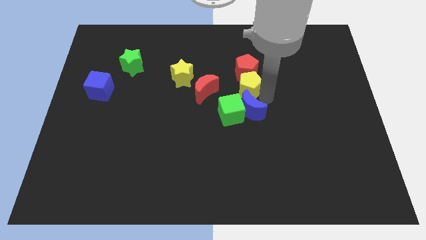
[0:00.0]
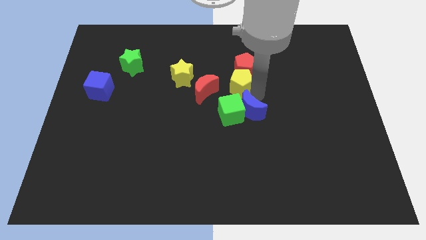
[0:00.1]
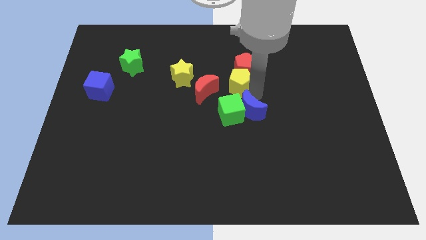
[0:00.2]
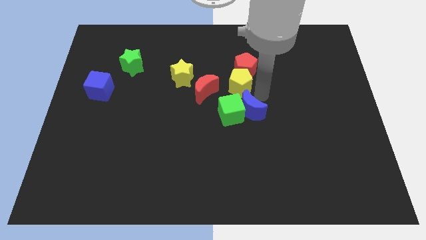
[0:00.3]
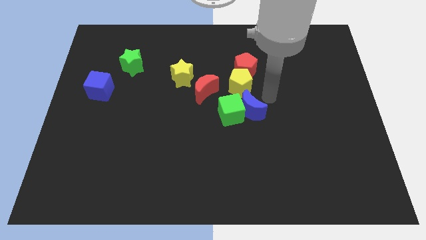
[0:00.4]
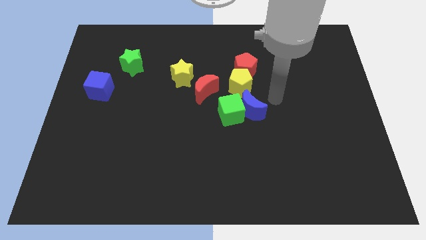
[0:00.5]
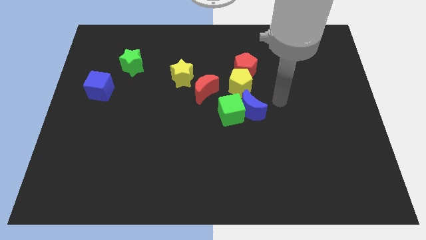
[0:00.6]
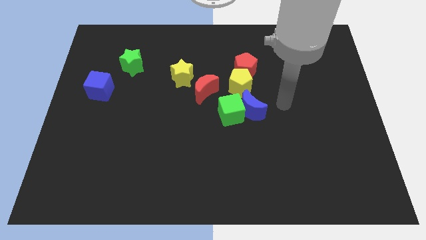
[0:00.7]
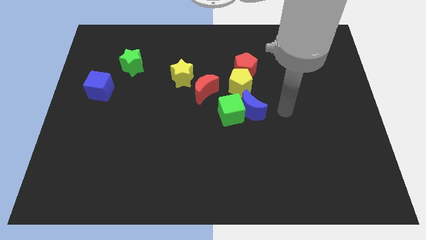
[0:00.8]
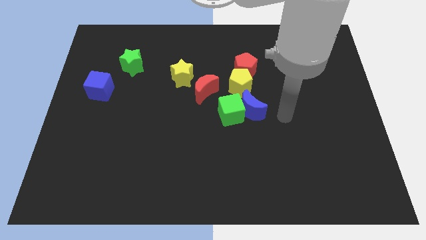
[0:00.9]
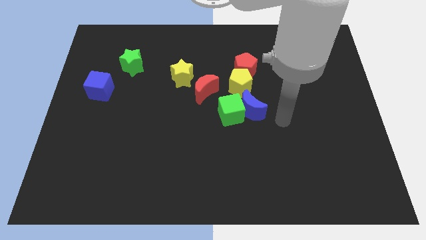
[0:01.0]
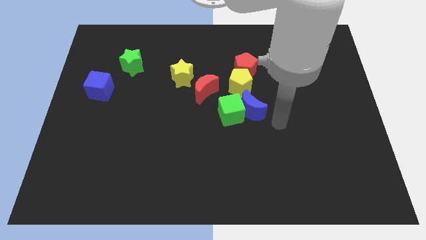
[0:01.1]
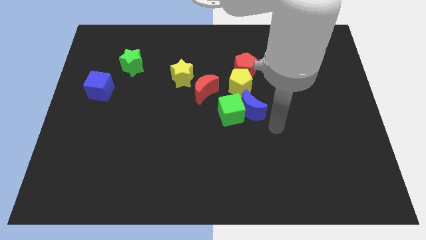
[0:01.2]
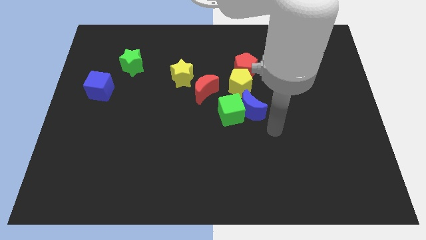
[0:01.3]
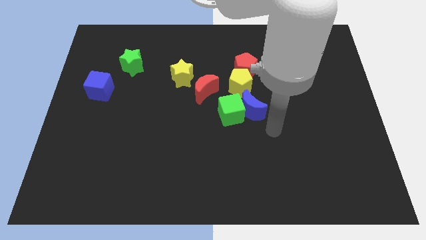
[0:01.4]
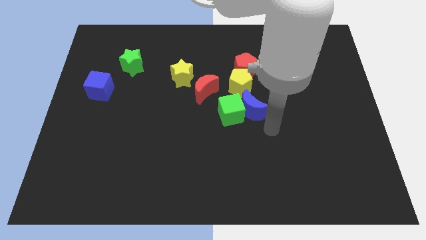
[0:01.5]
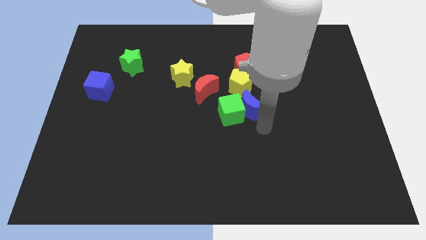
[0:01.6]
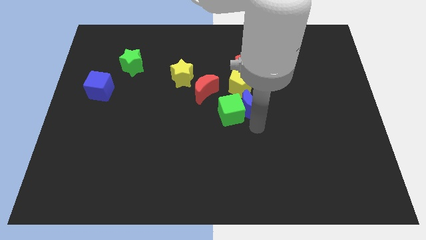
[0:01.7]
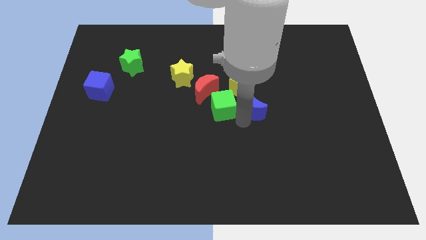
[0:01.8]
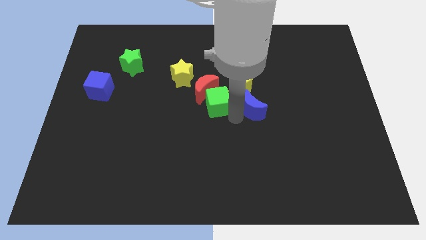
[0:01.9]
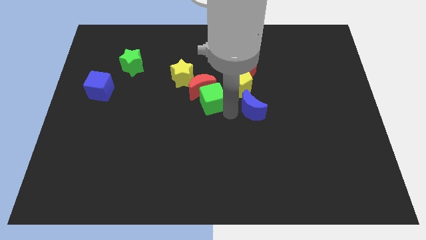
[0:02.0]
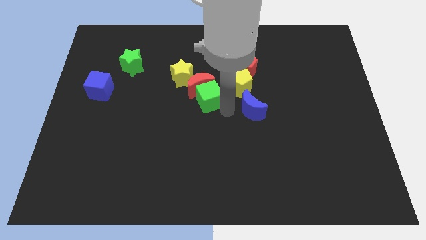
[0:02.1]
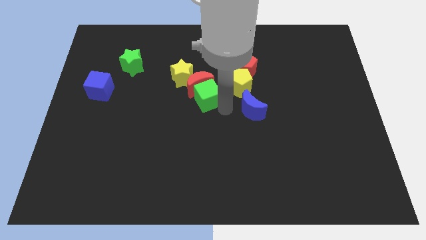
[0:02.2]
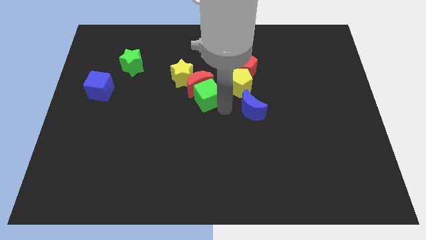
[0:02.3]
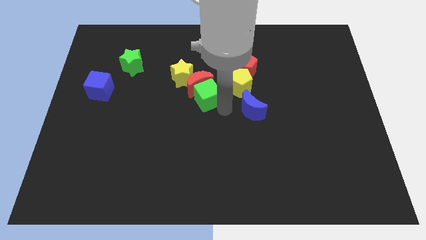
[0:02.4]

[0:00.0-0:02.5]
move green cube close to red moon

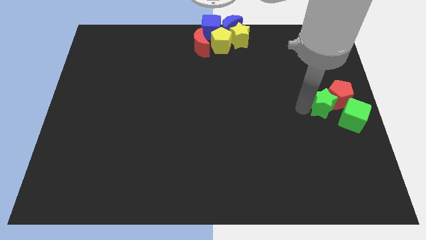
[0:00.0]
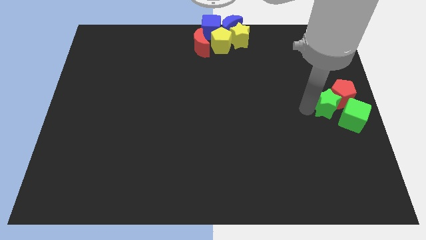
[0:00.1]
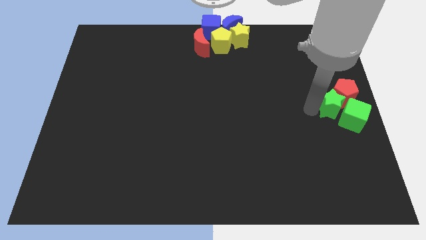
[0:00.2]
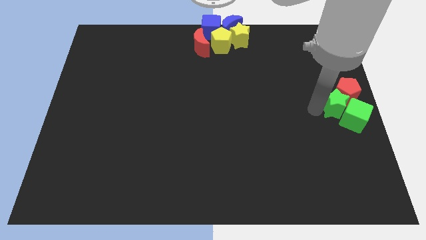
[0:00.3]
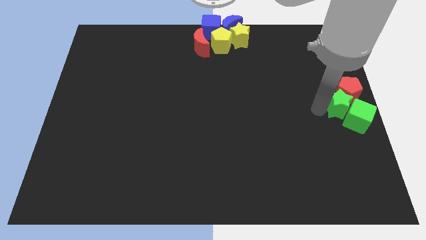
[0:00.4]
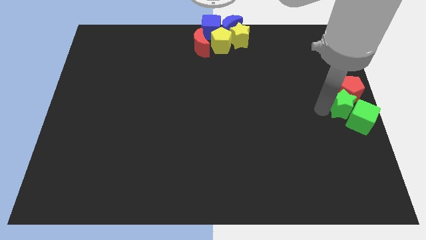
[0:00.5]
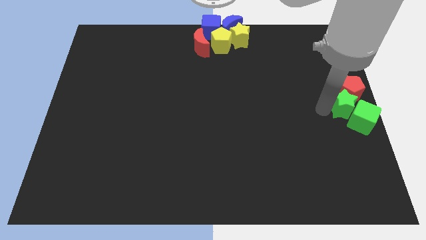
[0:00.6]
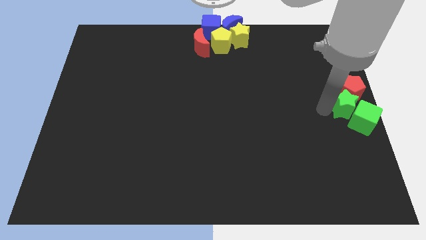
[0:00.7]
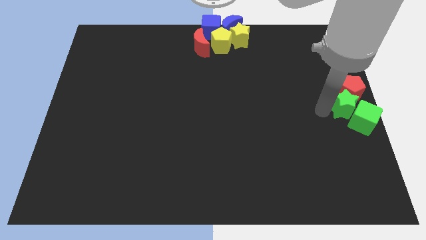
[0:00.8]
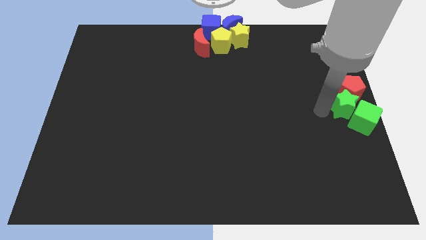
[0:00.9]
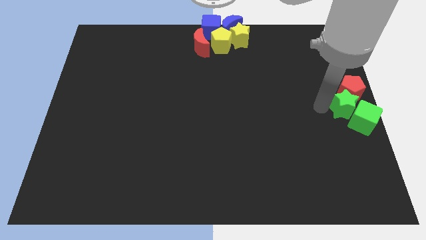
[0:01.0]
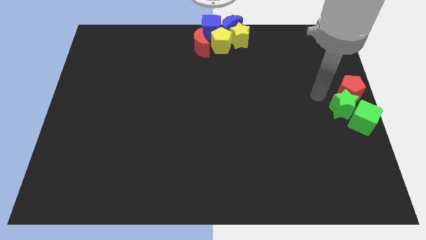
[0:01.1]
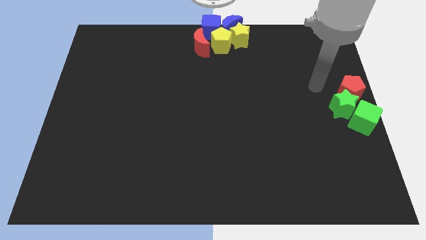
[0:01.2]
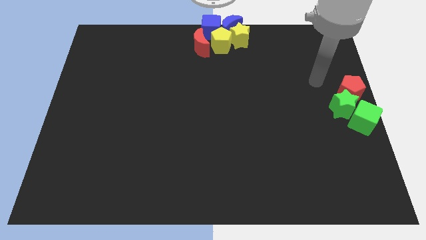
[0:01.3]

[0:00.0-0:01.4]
push the green star into the red pentagon and green cube

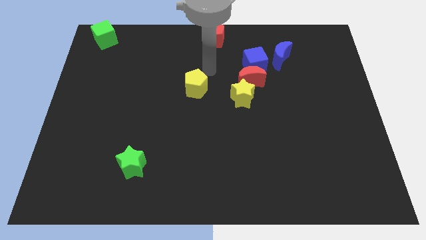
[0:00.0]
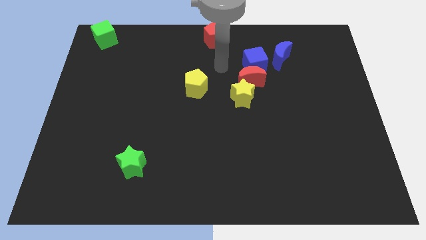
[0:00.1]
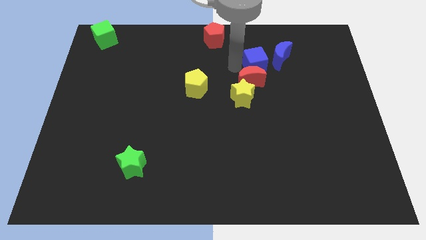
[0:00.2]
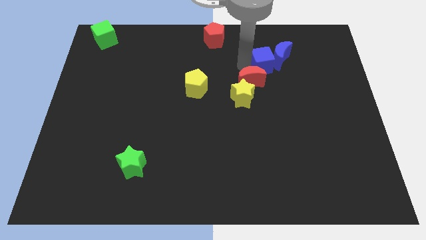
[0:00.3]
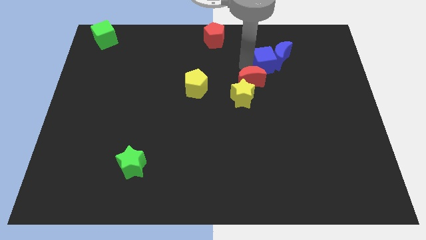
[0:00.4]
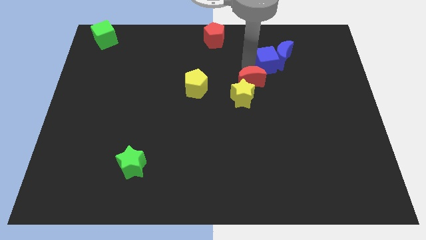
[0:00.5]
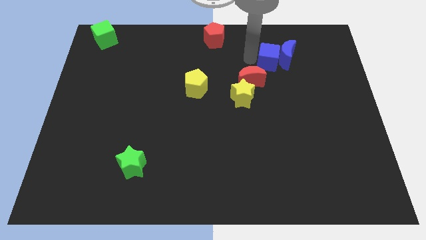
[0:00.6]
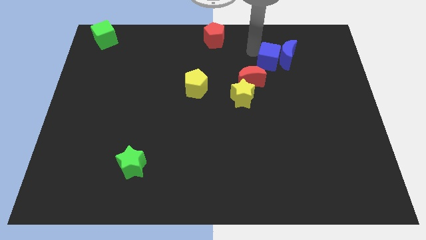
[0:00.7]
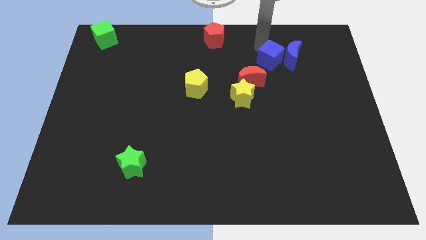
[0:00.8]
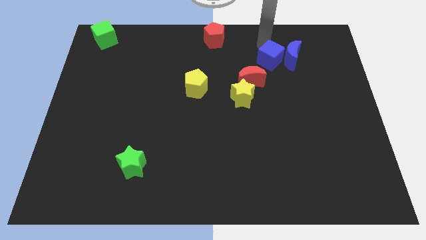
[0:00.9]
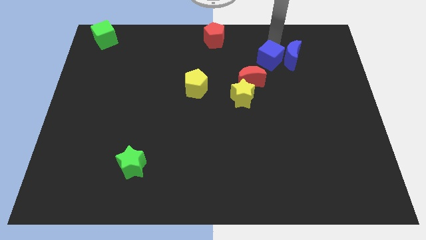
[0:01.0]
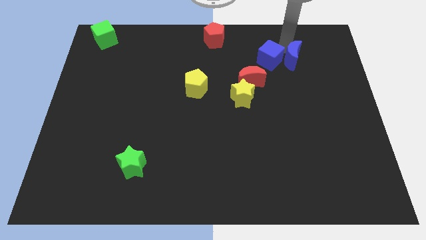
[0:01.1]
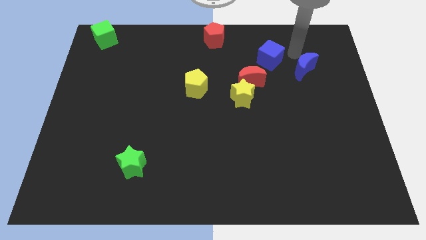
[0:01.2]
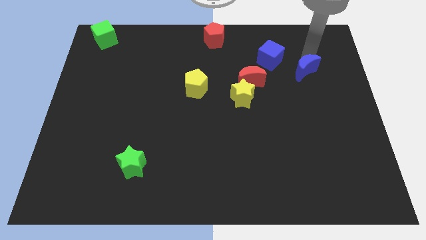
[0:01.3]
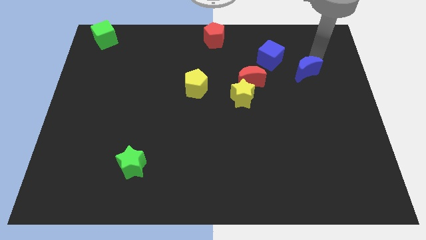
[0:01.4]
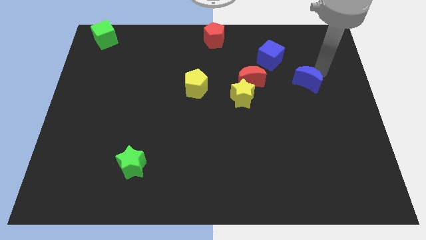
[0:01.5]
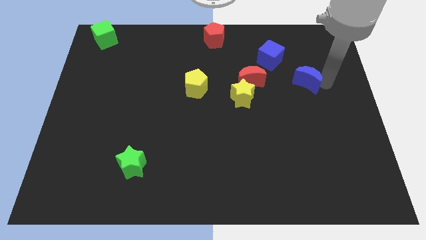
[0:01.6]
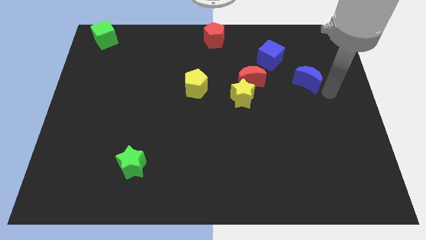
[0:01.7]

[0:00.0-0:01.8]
move the blue crescent away from the blue cube

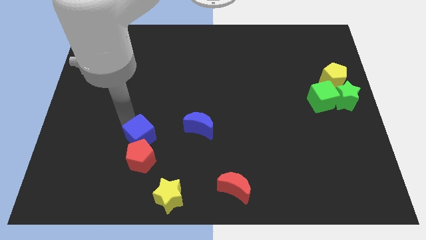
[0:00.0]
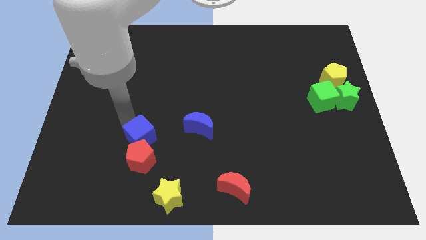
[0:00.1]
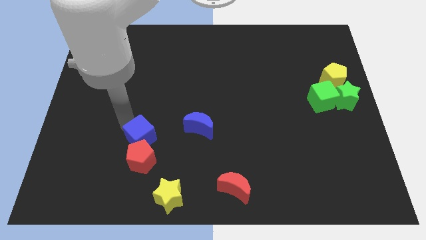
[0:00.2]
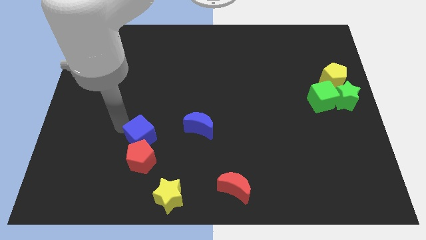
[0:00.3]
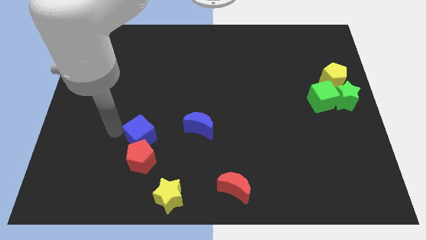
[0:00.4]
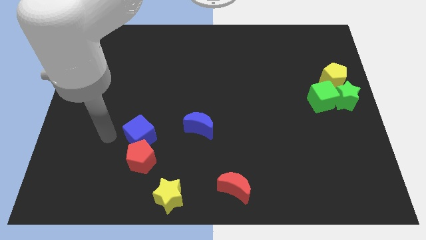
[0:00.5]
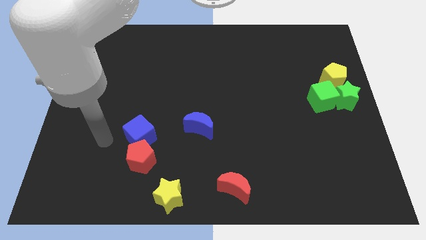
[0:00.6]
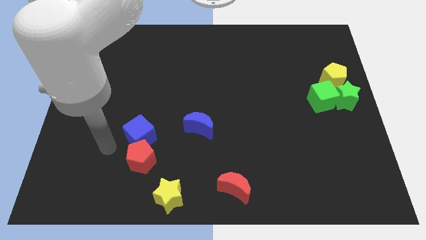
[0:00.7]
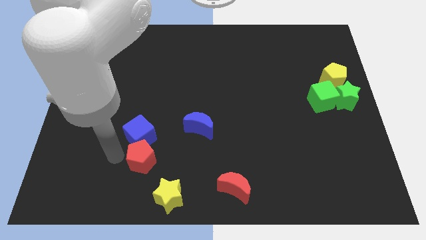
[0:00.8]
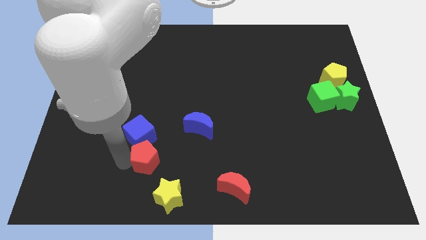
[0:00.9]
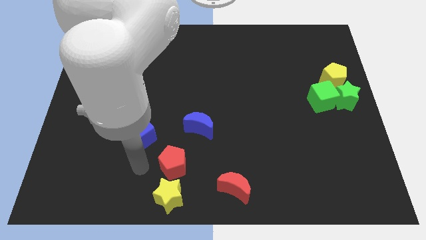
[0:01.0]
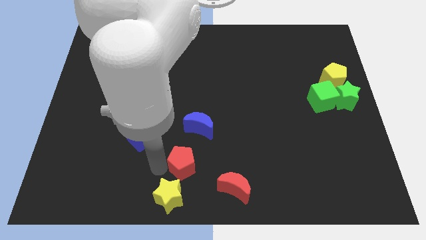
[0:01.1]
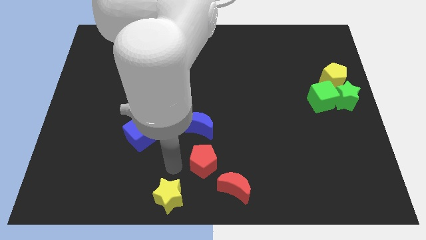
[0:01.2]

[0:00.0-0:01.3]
place the red pentagon above the yellow star

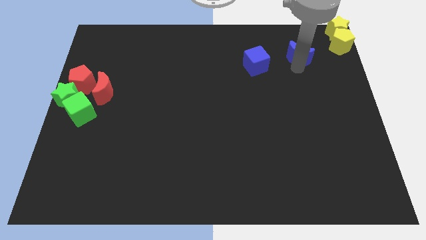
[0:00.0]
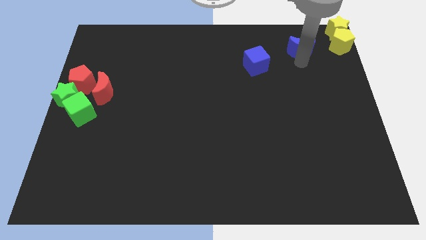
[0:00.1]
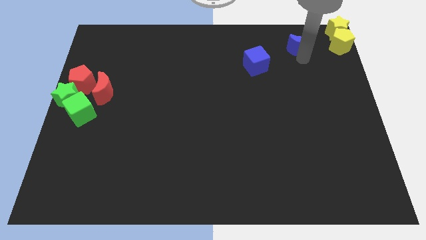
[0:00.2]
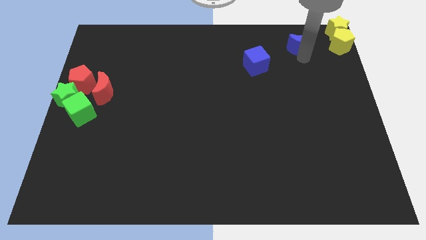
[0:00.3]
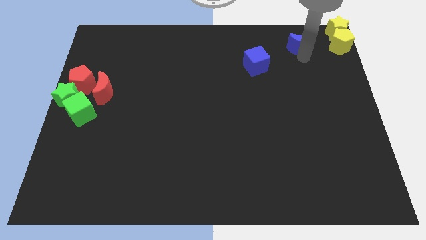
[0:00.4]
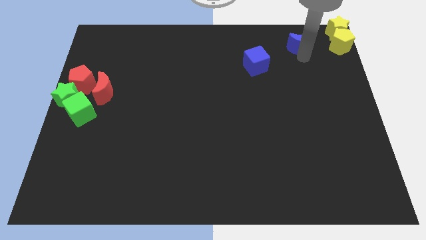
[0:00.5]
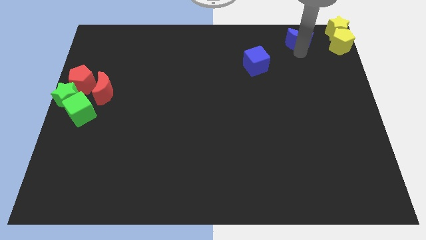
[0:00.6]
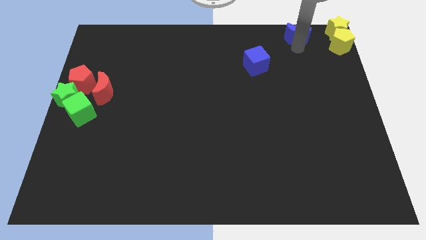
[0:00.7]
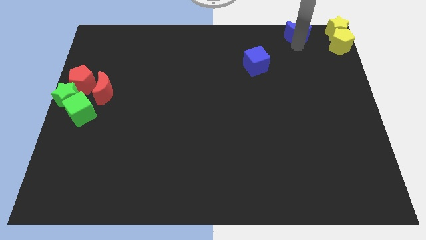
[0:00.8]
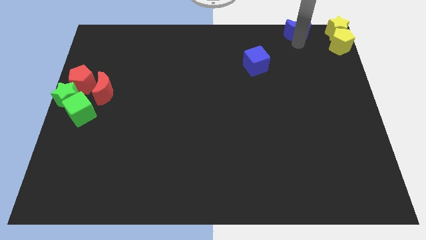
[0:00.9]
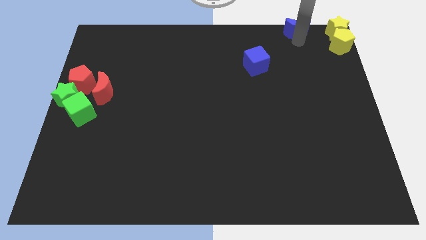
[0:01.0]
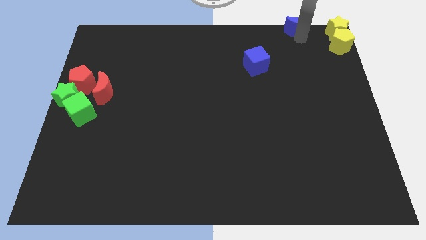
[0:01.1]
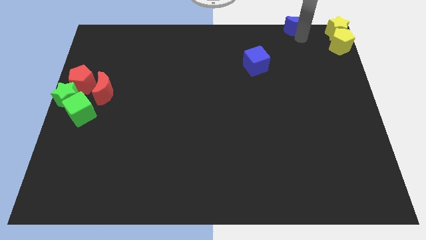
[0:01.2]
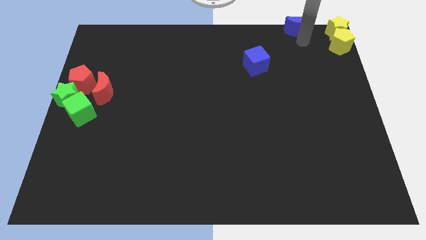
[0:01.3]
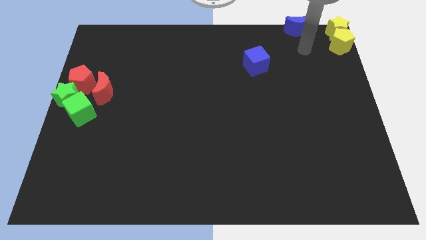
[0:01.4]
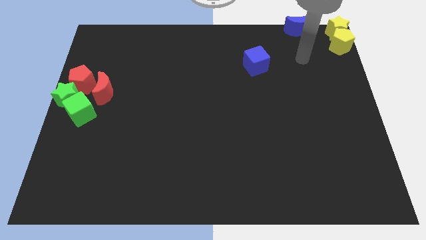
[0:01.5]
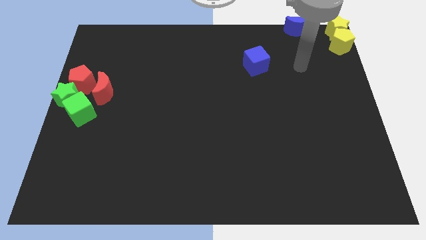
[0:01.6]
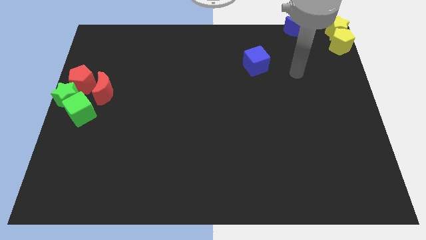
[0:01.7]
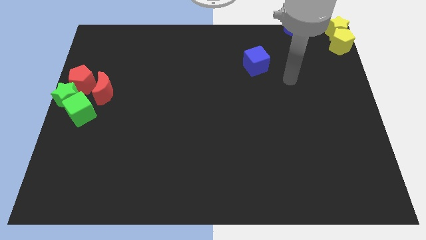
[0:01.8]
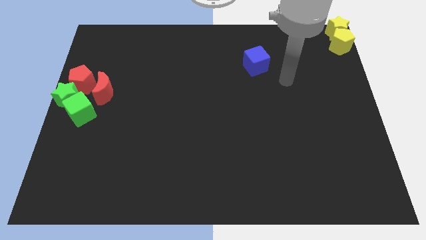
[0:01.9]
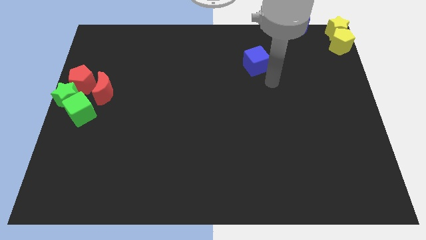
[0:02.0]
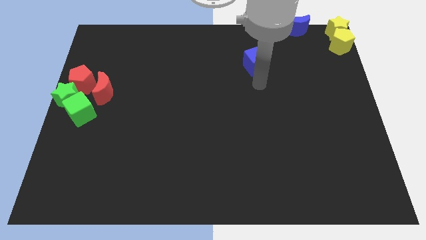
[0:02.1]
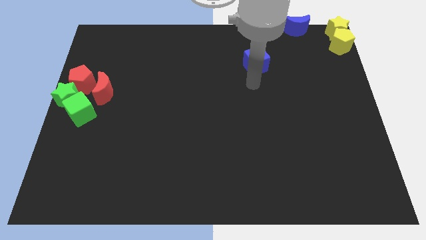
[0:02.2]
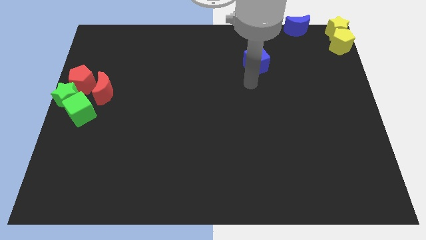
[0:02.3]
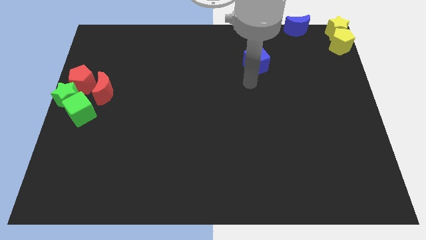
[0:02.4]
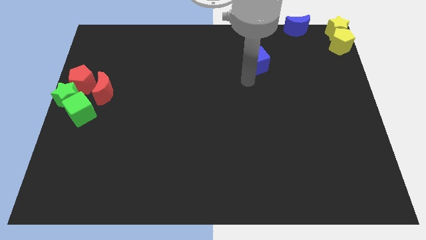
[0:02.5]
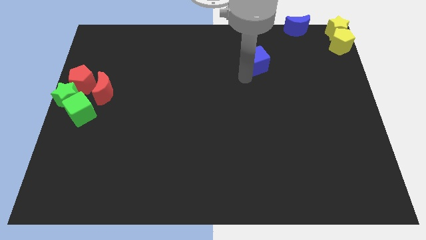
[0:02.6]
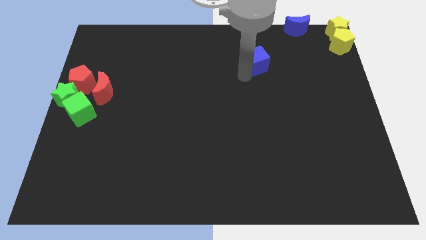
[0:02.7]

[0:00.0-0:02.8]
place blue moon left to the yellow star
